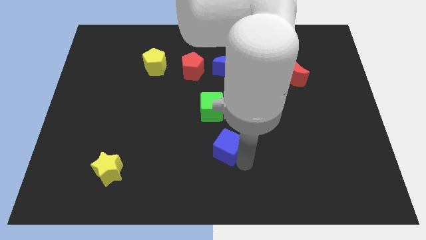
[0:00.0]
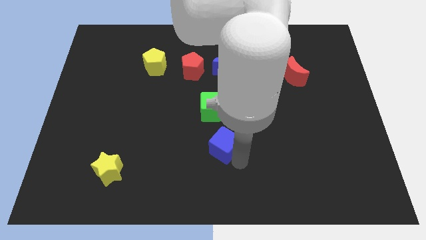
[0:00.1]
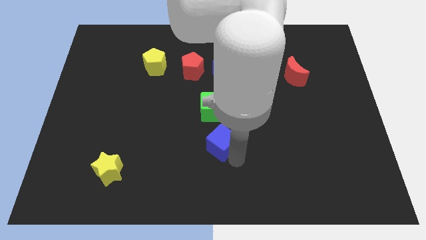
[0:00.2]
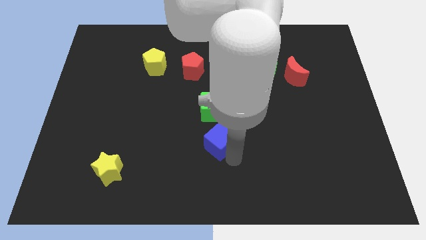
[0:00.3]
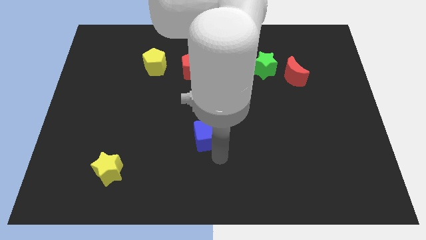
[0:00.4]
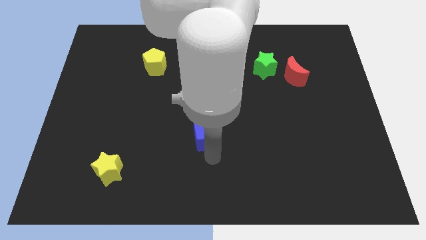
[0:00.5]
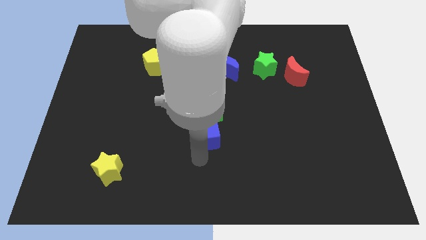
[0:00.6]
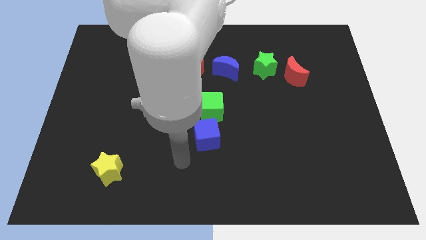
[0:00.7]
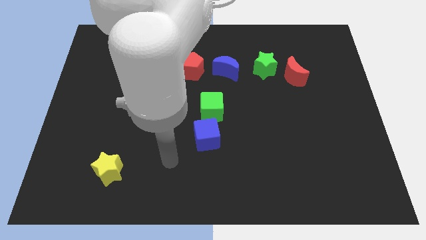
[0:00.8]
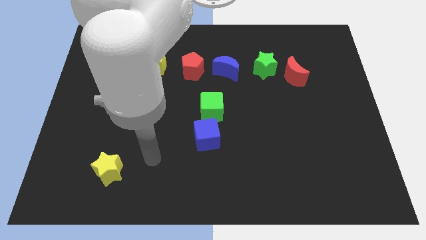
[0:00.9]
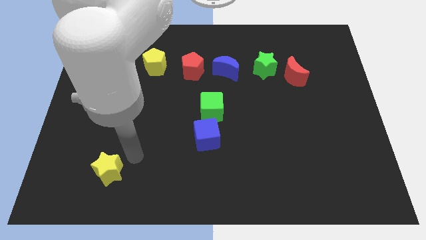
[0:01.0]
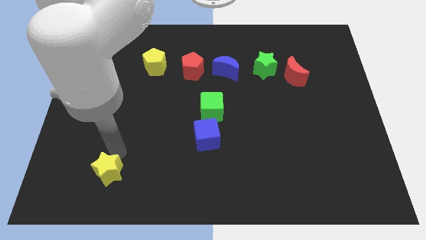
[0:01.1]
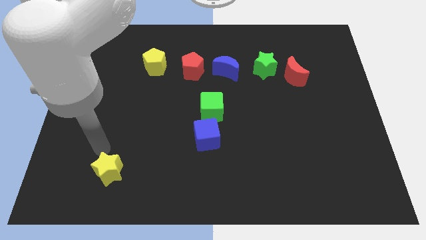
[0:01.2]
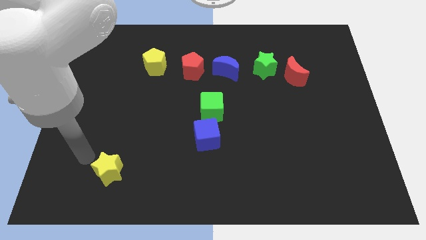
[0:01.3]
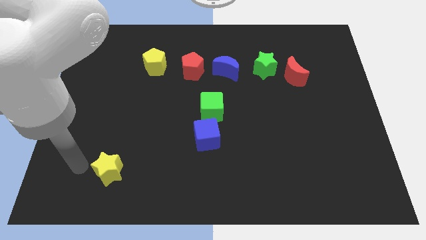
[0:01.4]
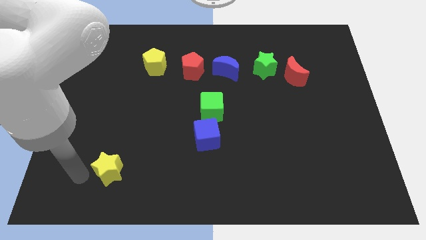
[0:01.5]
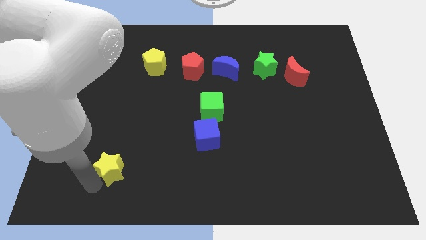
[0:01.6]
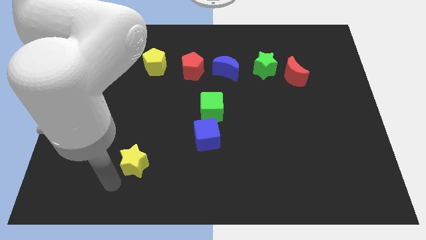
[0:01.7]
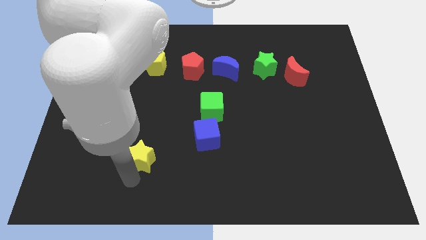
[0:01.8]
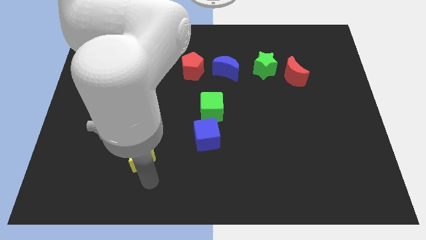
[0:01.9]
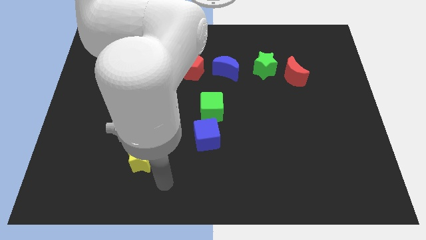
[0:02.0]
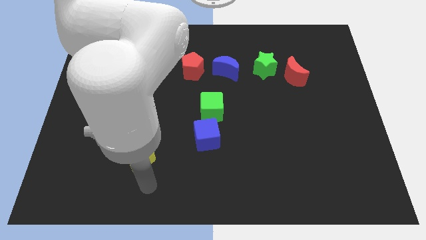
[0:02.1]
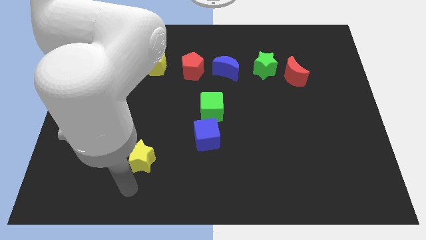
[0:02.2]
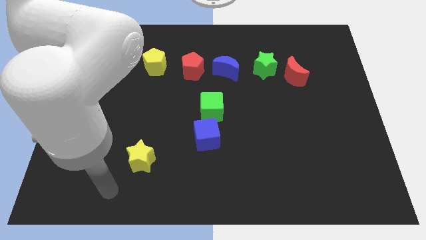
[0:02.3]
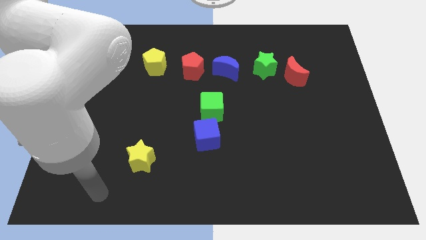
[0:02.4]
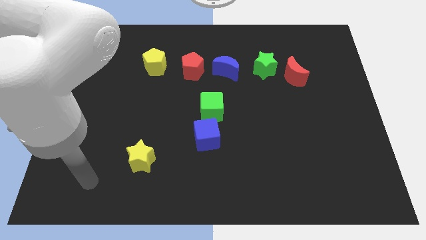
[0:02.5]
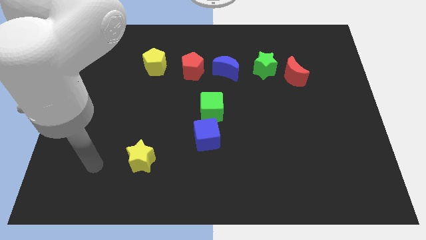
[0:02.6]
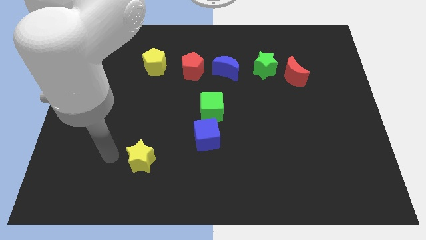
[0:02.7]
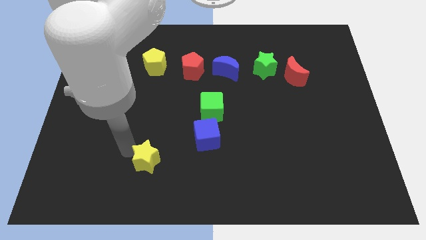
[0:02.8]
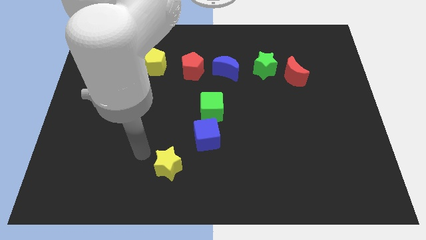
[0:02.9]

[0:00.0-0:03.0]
place the yellow star diagonally to the right of blue cube

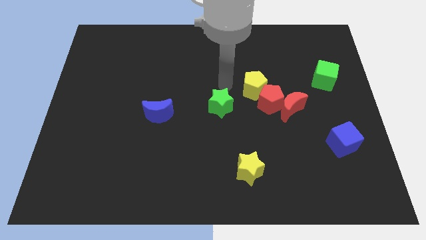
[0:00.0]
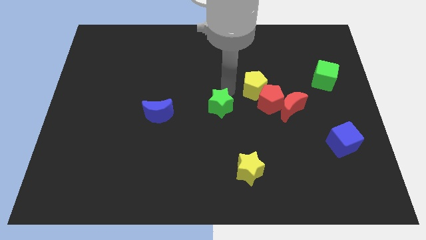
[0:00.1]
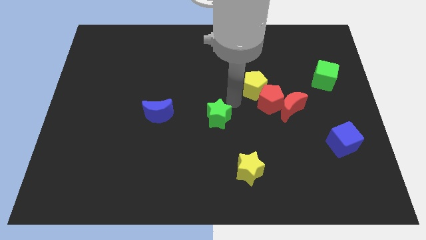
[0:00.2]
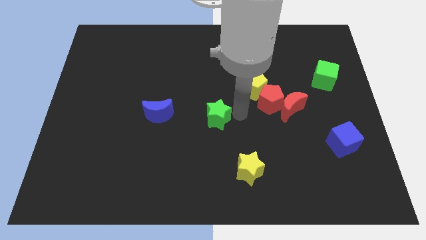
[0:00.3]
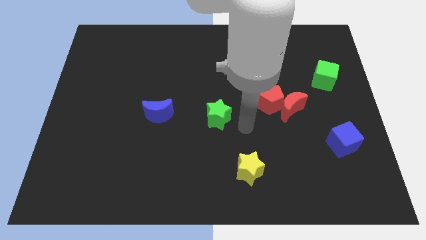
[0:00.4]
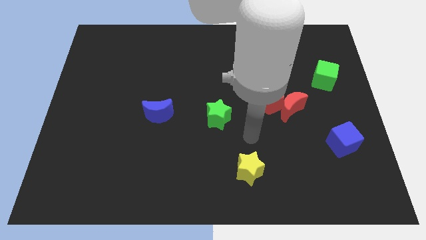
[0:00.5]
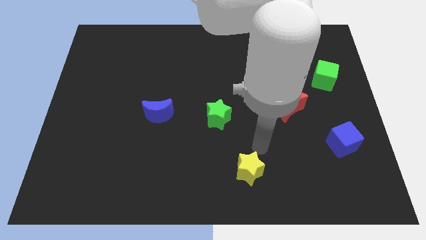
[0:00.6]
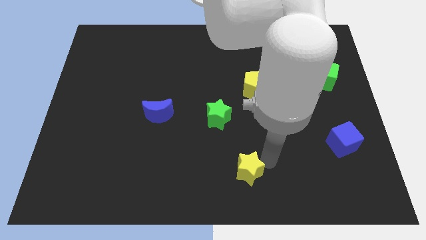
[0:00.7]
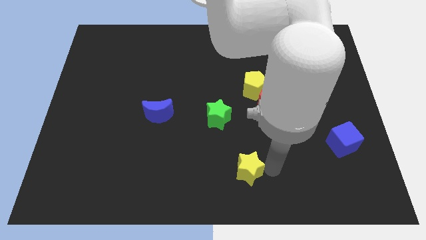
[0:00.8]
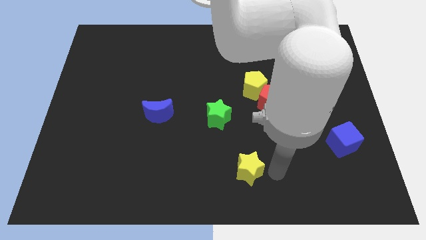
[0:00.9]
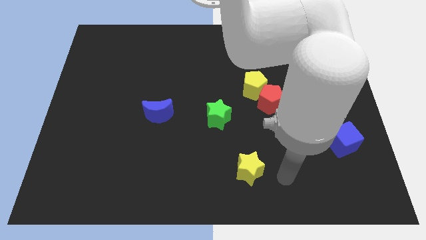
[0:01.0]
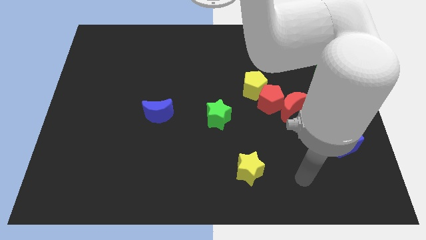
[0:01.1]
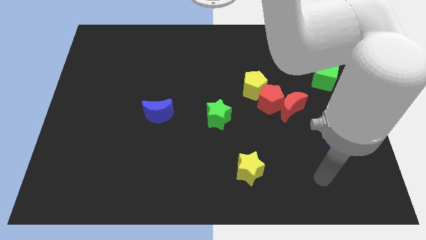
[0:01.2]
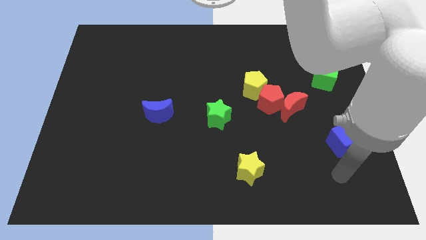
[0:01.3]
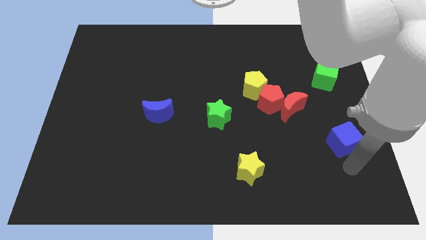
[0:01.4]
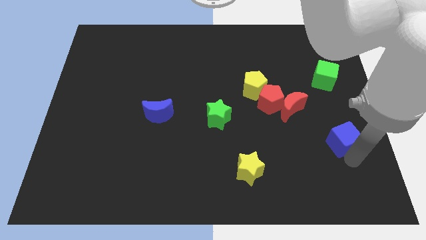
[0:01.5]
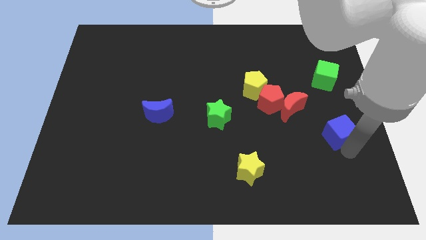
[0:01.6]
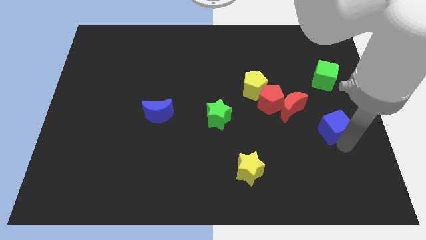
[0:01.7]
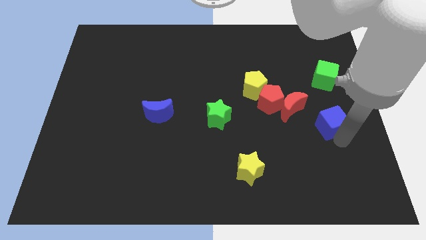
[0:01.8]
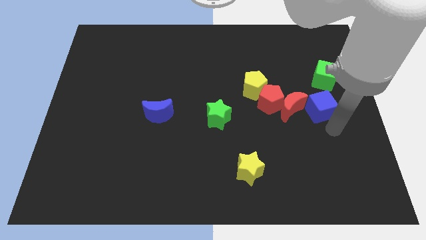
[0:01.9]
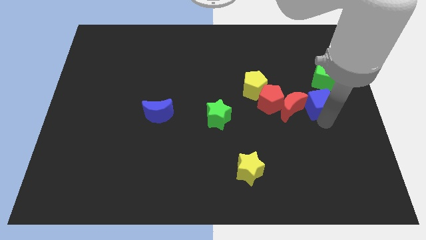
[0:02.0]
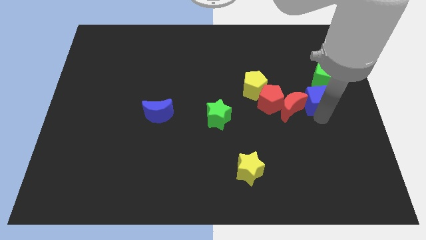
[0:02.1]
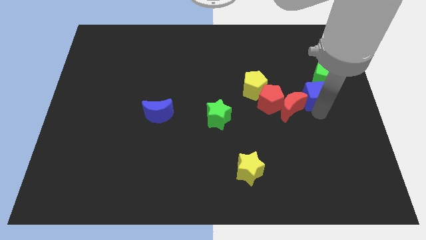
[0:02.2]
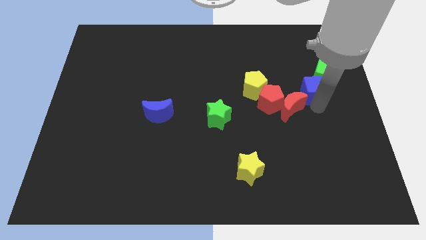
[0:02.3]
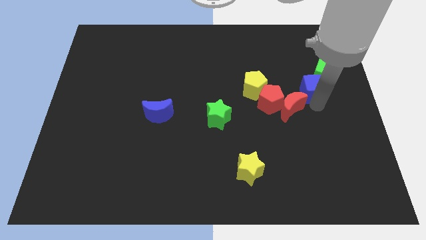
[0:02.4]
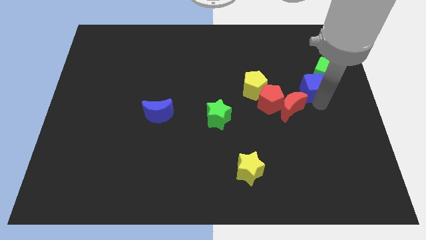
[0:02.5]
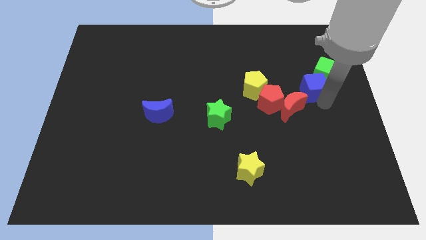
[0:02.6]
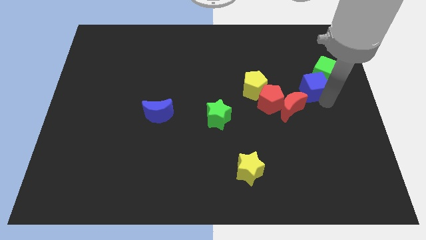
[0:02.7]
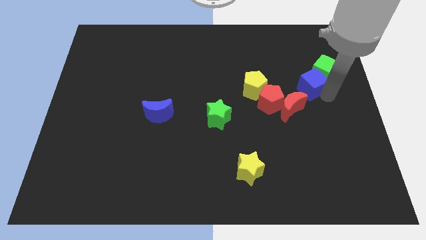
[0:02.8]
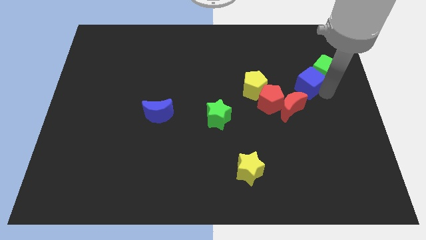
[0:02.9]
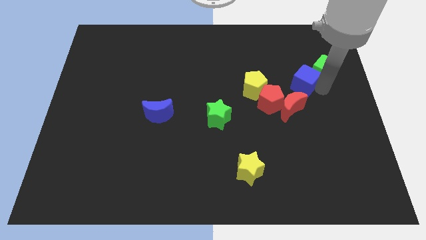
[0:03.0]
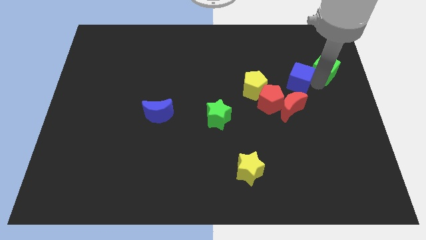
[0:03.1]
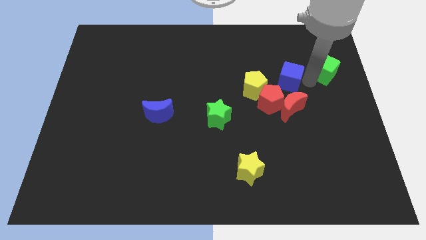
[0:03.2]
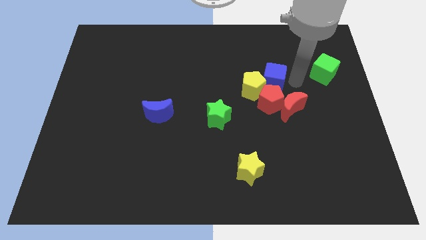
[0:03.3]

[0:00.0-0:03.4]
place the blue cube above the red pentagon

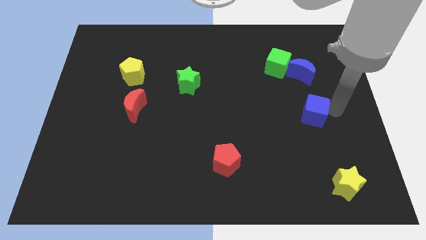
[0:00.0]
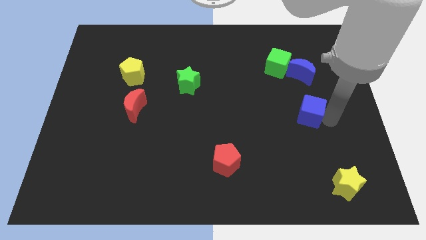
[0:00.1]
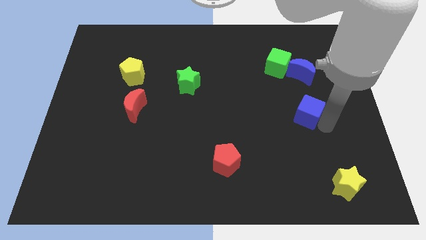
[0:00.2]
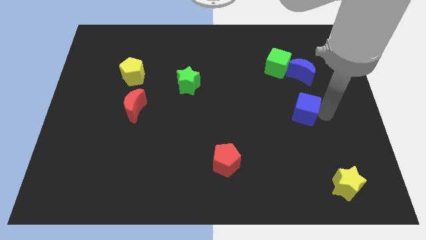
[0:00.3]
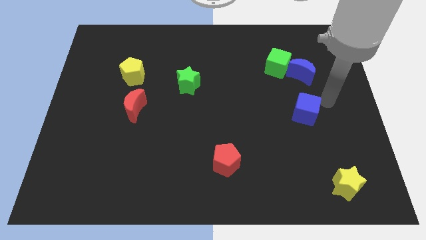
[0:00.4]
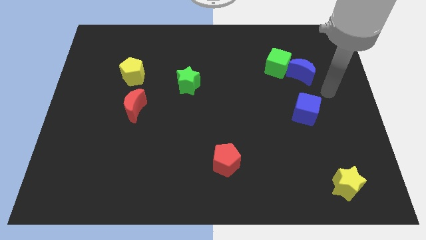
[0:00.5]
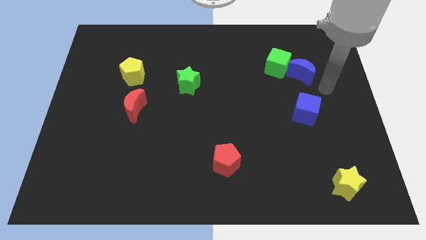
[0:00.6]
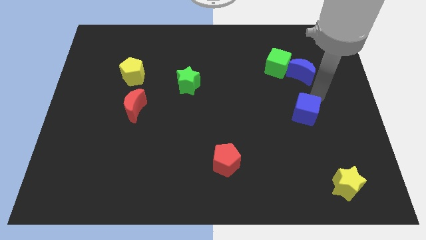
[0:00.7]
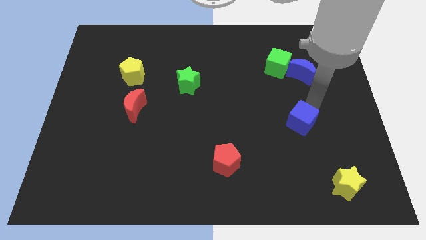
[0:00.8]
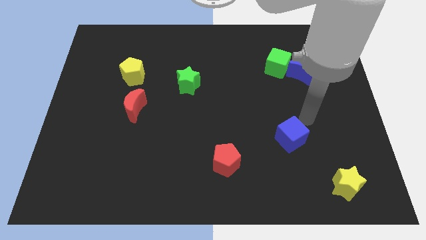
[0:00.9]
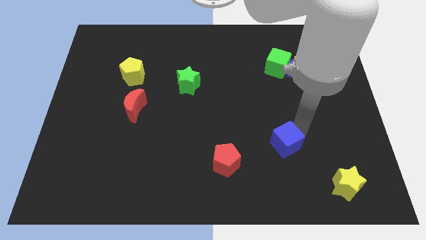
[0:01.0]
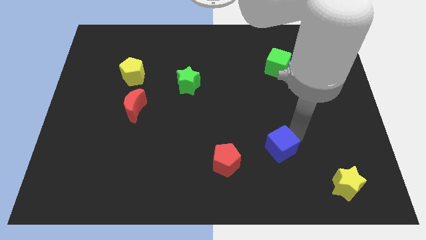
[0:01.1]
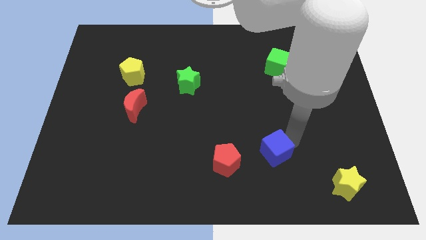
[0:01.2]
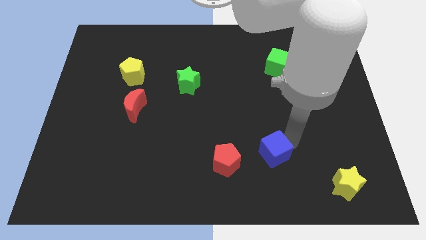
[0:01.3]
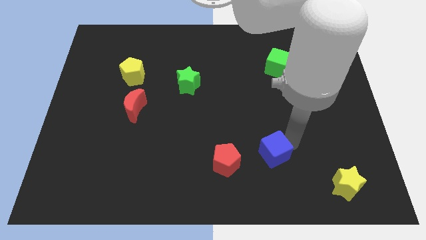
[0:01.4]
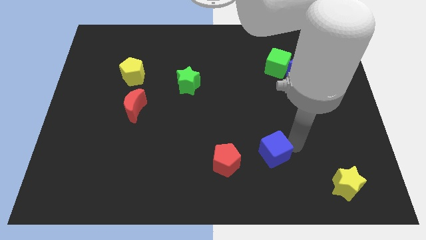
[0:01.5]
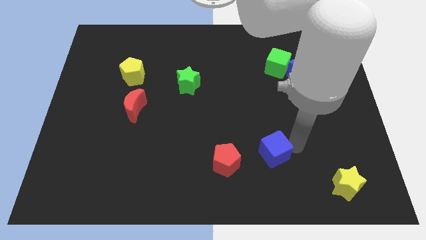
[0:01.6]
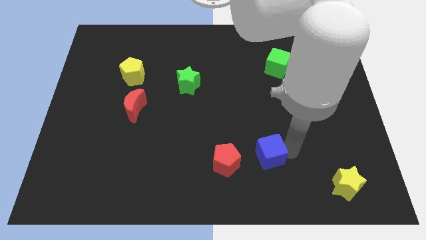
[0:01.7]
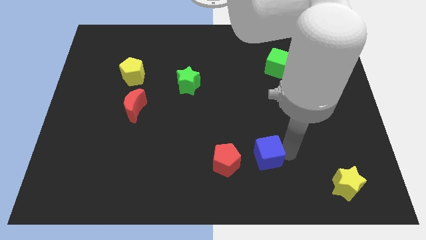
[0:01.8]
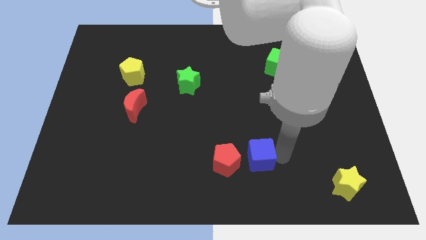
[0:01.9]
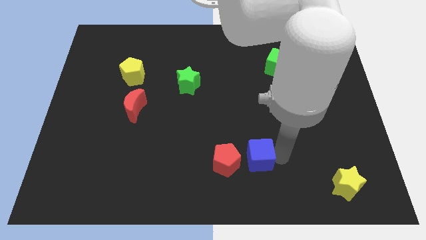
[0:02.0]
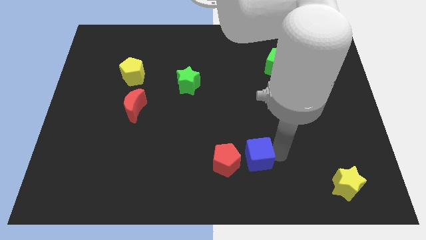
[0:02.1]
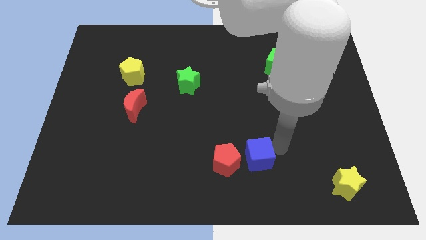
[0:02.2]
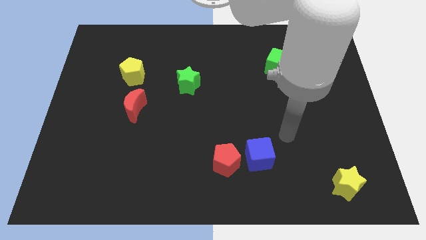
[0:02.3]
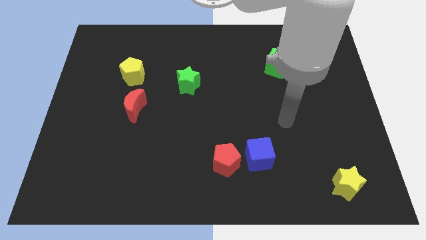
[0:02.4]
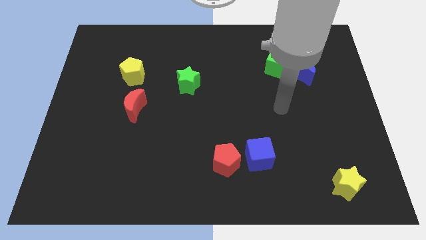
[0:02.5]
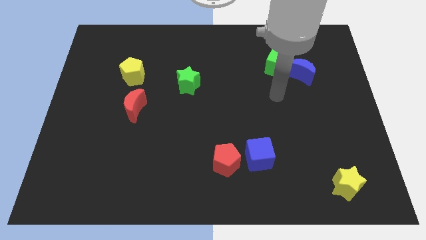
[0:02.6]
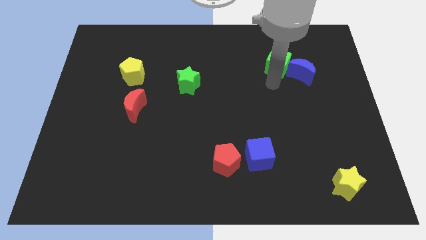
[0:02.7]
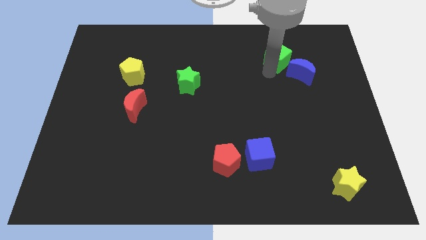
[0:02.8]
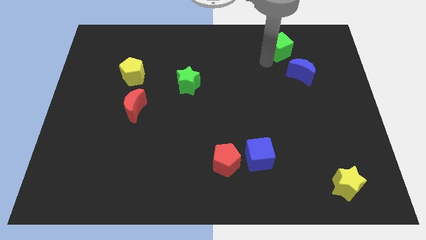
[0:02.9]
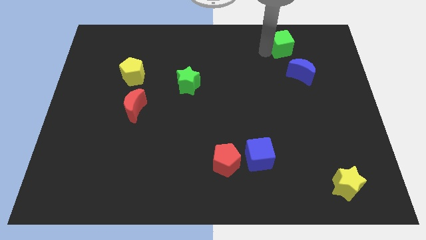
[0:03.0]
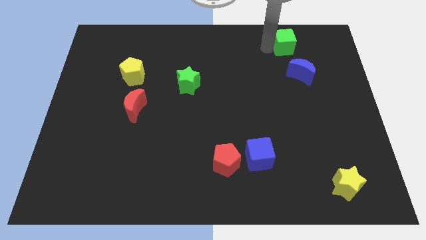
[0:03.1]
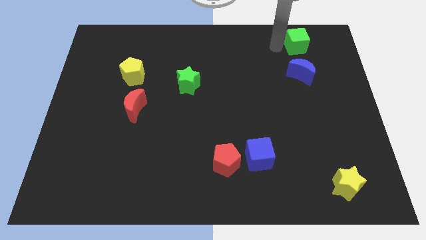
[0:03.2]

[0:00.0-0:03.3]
push the blue cube to the right side of the red pentagon
